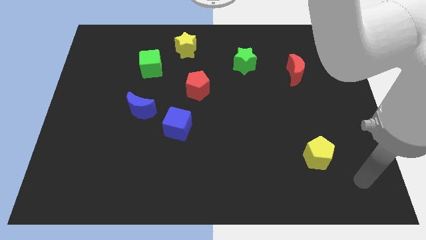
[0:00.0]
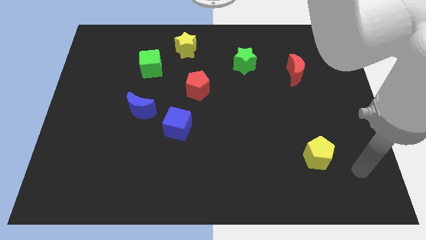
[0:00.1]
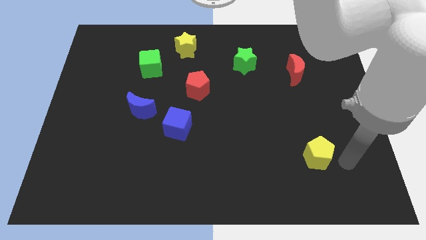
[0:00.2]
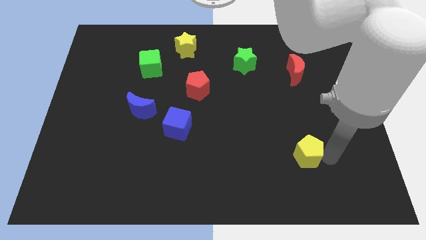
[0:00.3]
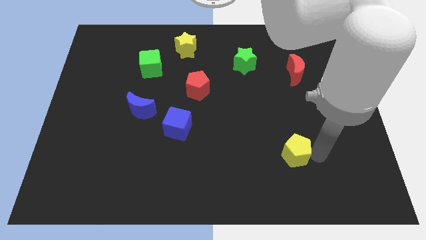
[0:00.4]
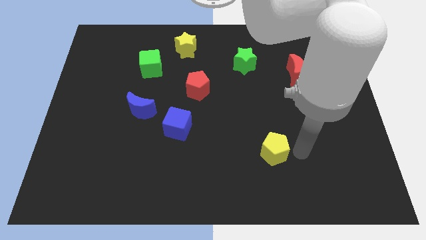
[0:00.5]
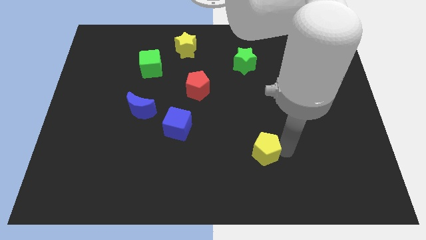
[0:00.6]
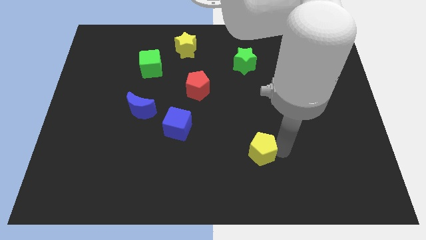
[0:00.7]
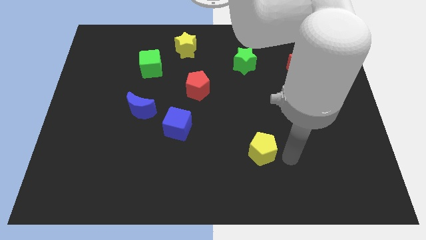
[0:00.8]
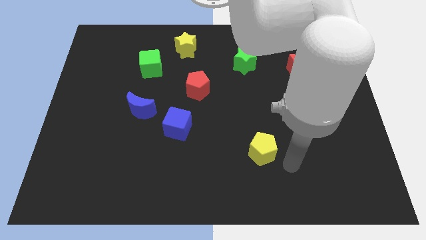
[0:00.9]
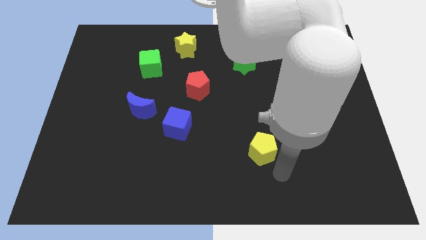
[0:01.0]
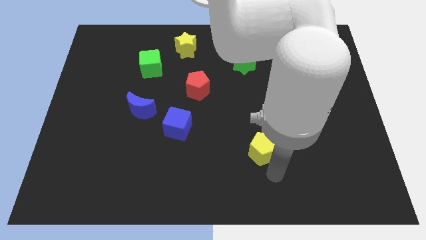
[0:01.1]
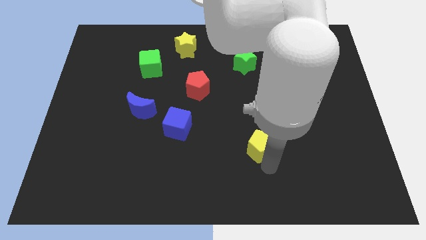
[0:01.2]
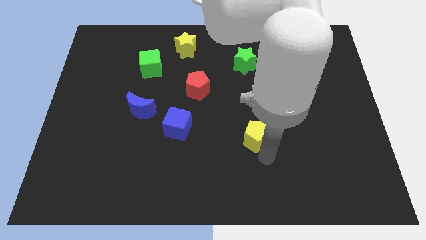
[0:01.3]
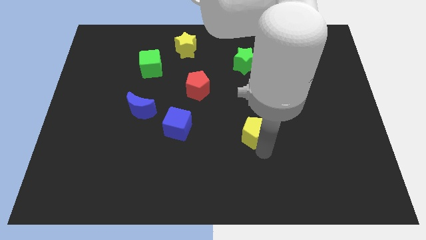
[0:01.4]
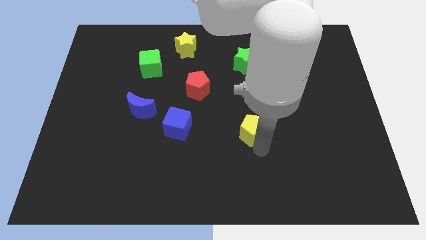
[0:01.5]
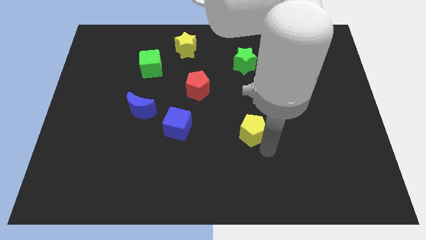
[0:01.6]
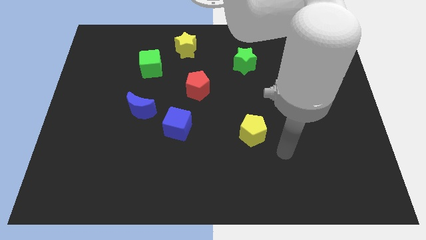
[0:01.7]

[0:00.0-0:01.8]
push yellow pentagon towards the blue block

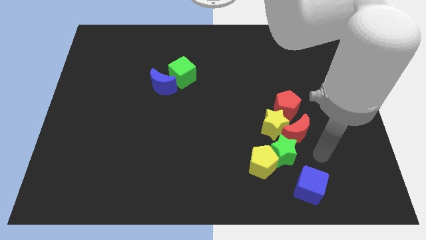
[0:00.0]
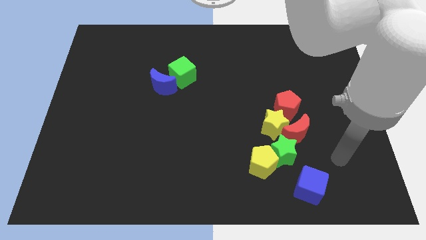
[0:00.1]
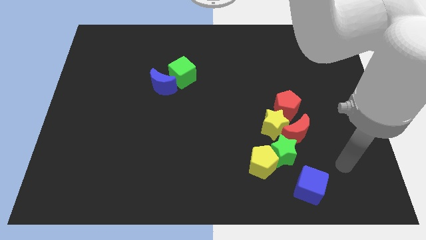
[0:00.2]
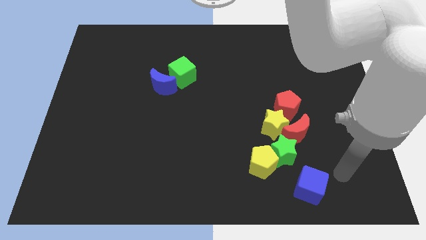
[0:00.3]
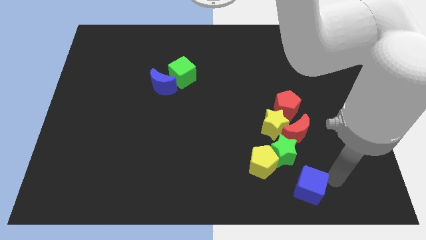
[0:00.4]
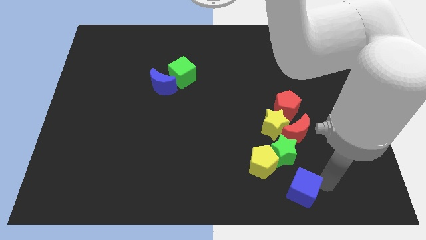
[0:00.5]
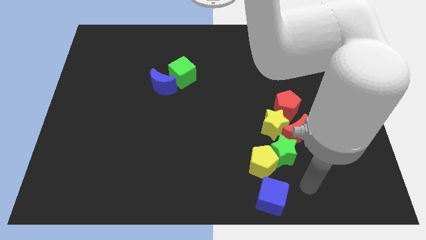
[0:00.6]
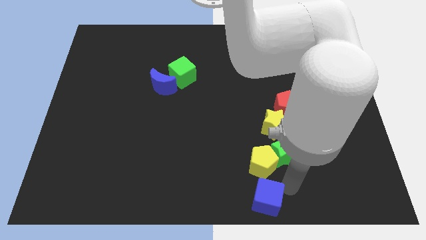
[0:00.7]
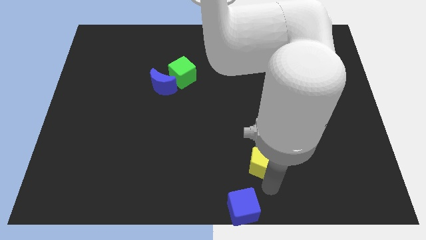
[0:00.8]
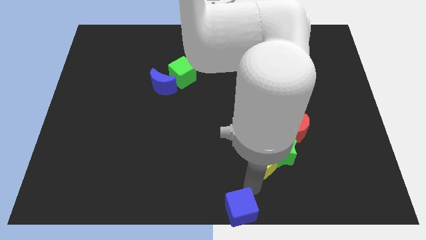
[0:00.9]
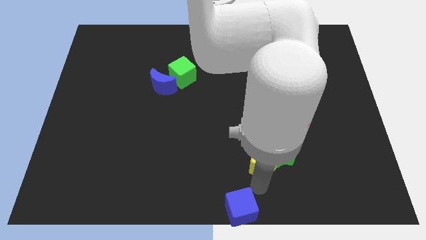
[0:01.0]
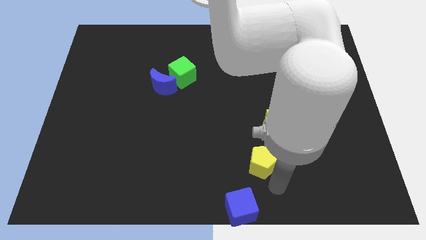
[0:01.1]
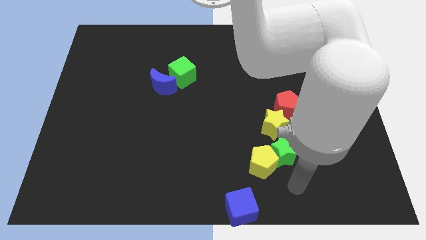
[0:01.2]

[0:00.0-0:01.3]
move blue cube to the bottom center of the board

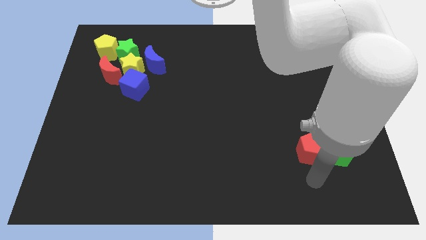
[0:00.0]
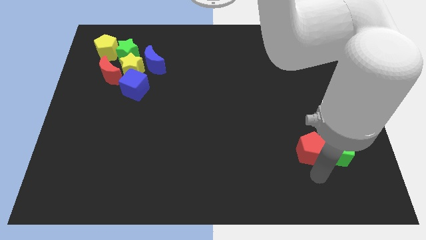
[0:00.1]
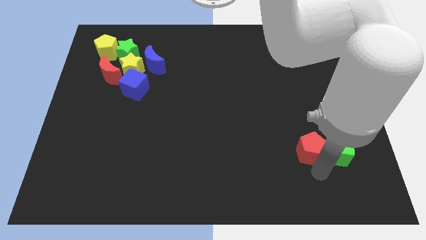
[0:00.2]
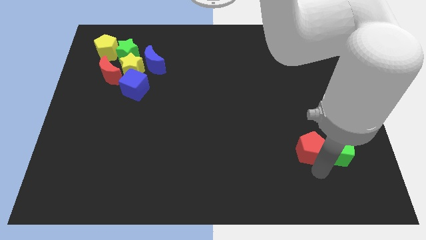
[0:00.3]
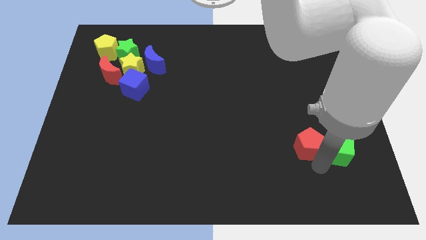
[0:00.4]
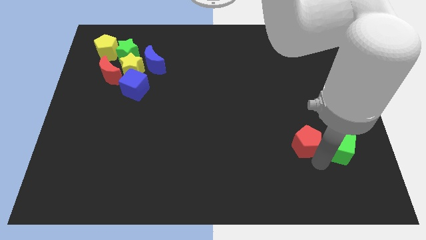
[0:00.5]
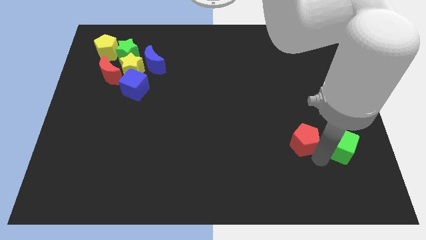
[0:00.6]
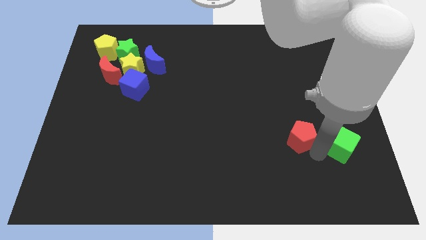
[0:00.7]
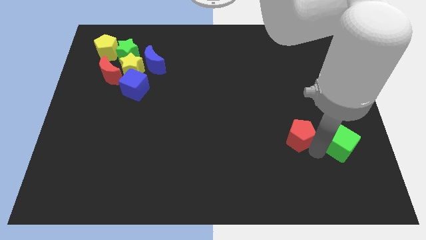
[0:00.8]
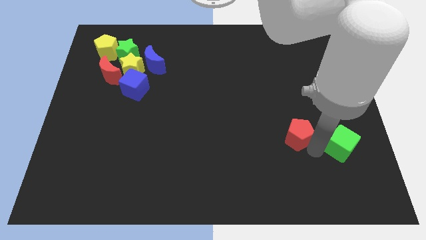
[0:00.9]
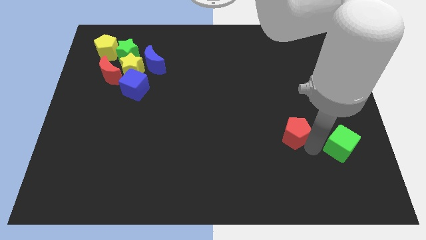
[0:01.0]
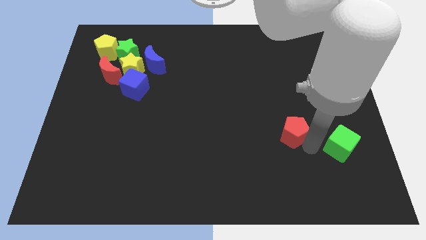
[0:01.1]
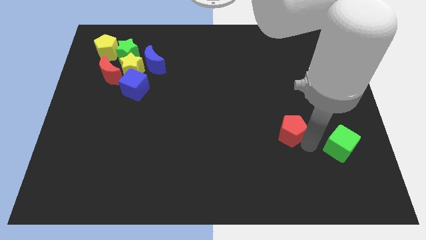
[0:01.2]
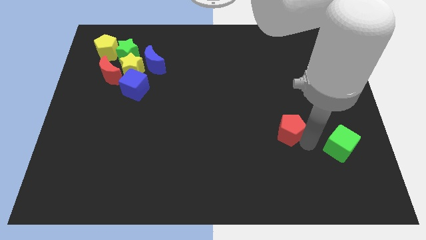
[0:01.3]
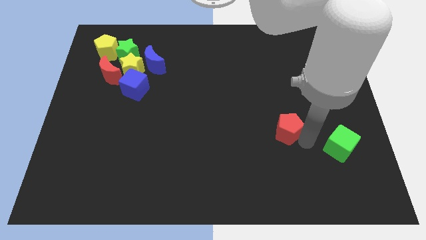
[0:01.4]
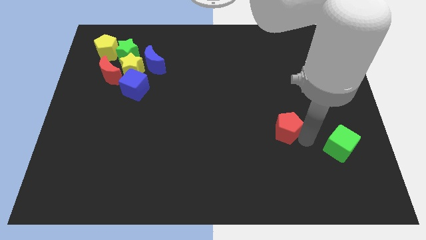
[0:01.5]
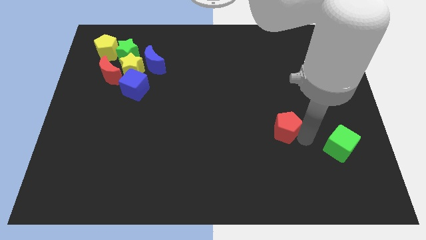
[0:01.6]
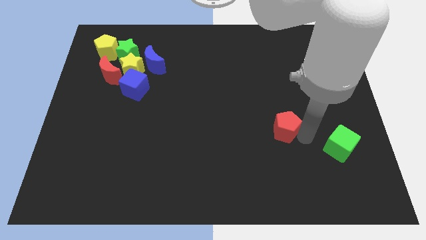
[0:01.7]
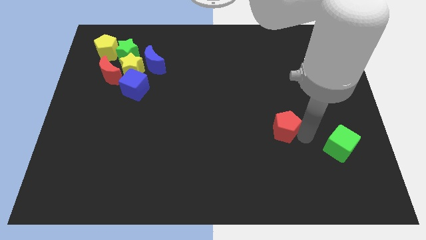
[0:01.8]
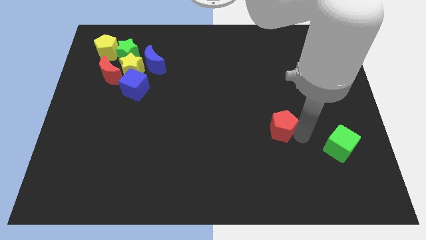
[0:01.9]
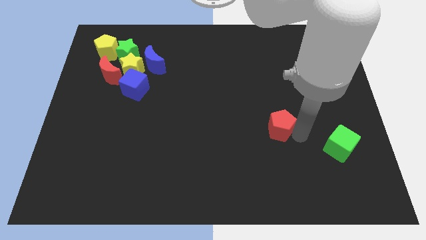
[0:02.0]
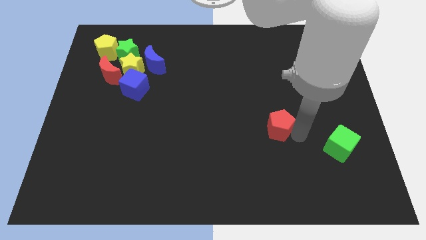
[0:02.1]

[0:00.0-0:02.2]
separate the red pentagon and green cube

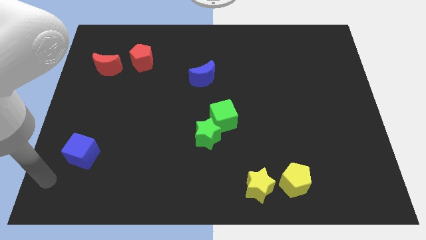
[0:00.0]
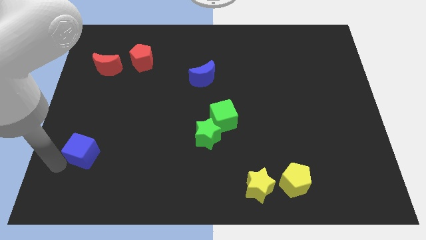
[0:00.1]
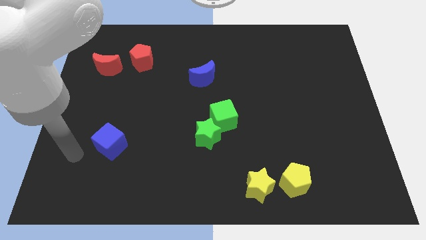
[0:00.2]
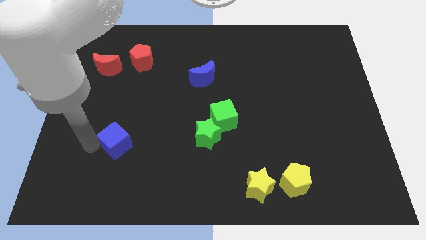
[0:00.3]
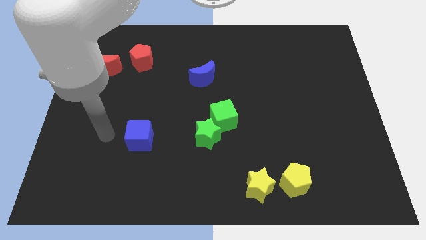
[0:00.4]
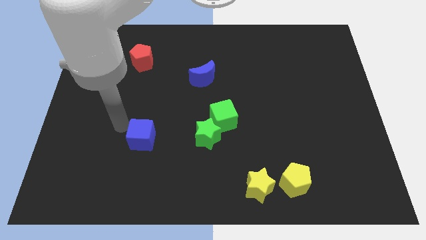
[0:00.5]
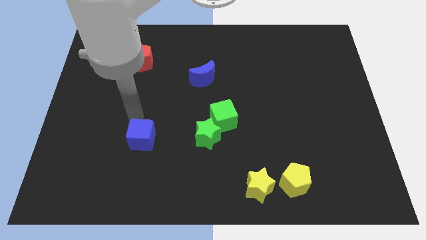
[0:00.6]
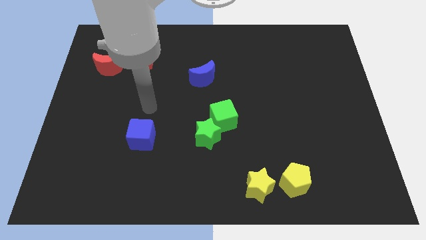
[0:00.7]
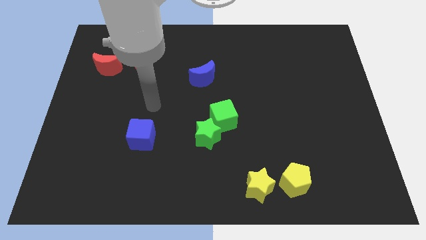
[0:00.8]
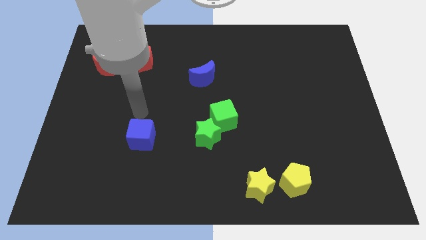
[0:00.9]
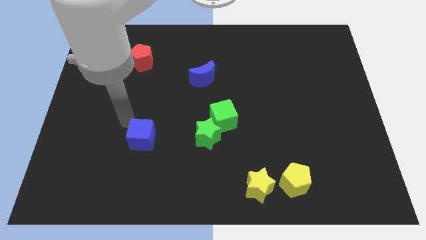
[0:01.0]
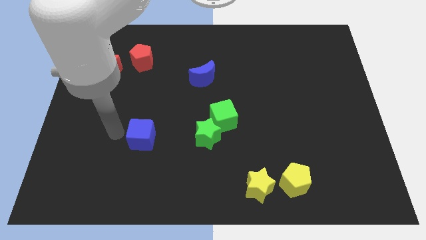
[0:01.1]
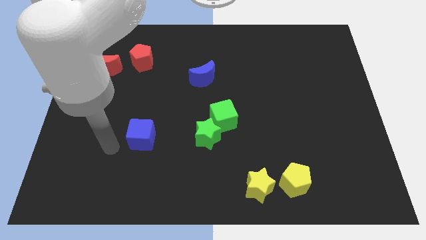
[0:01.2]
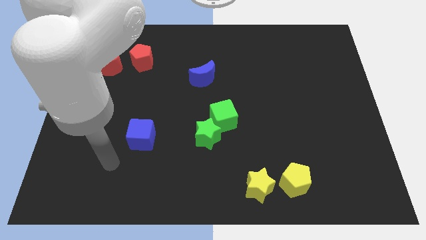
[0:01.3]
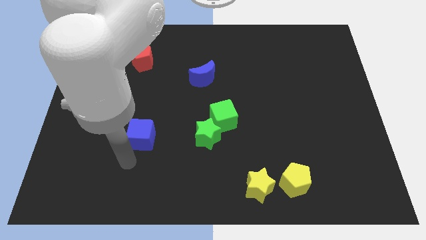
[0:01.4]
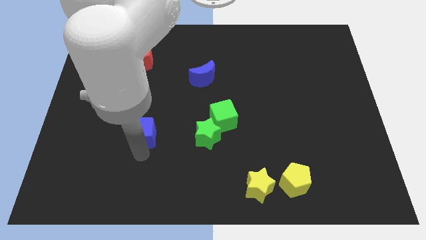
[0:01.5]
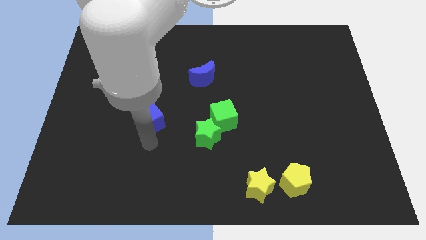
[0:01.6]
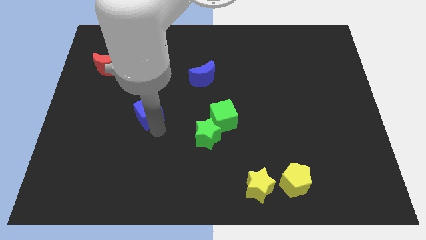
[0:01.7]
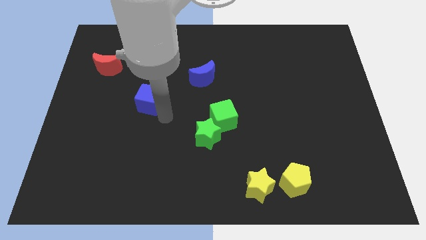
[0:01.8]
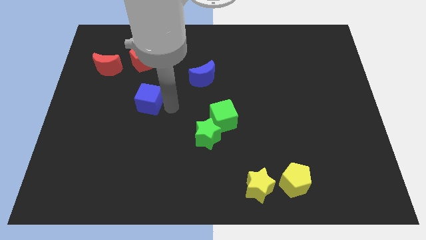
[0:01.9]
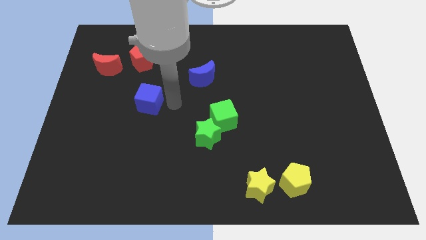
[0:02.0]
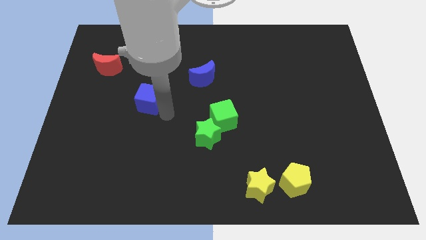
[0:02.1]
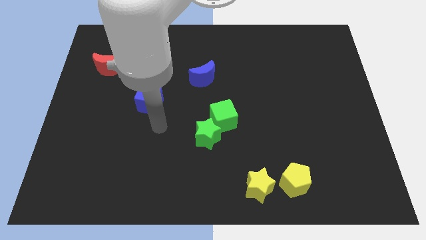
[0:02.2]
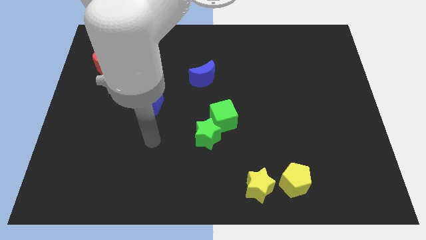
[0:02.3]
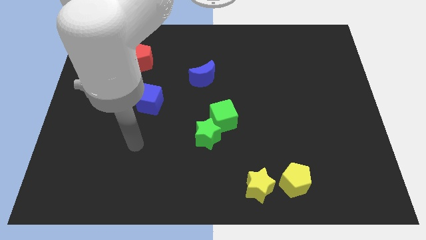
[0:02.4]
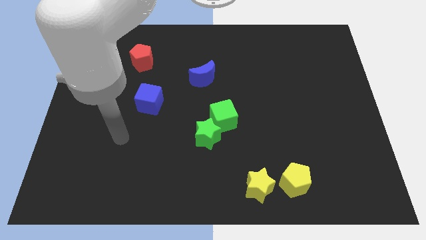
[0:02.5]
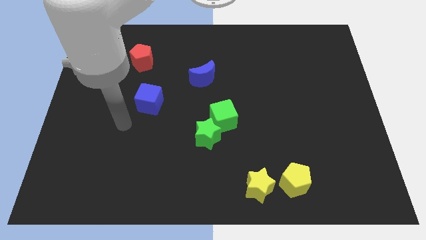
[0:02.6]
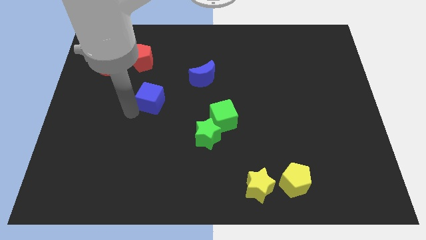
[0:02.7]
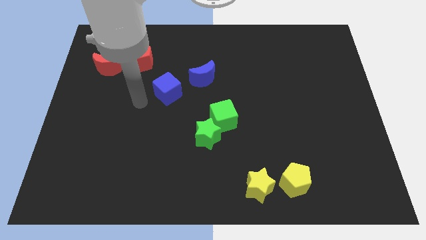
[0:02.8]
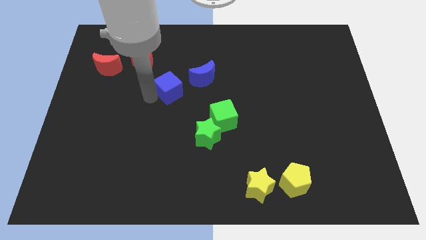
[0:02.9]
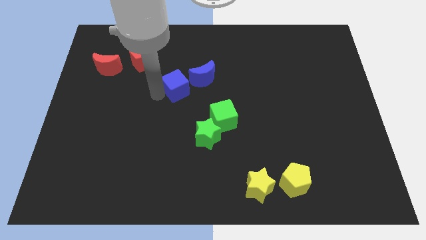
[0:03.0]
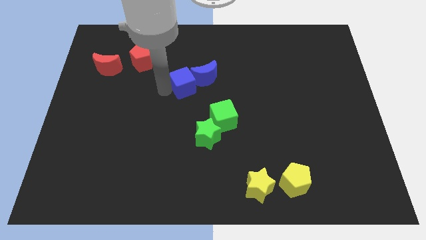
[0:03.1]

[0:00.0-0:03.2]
push the blue cube bottom left to the blue crescent

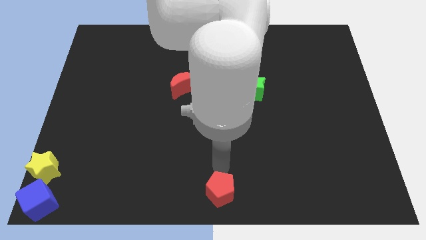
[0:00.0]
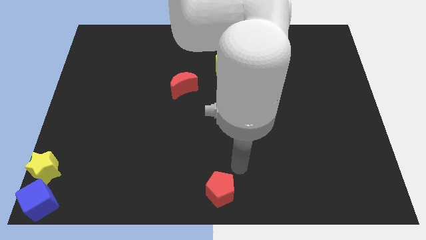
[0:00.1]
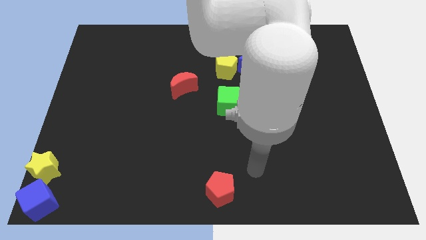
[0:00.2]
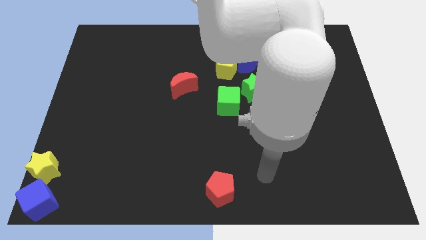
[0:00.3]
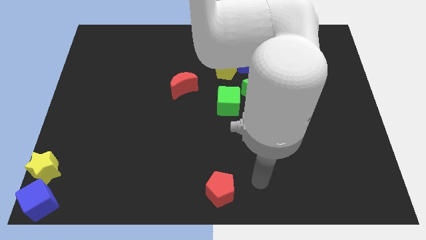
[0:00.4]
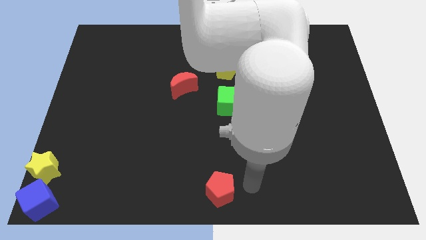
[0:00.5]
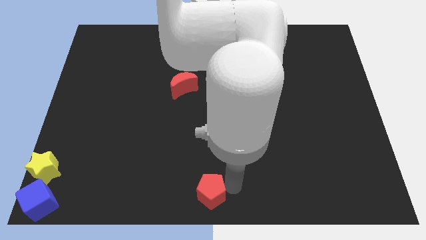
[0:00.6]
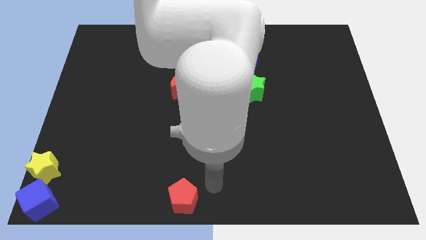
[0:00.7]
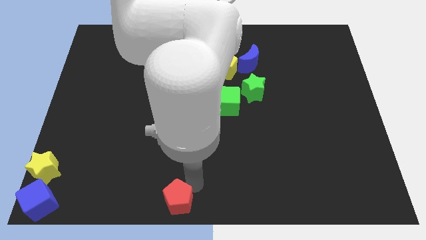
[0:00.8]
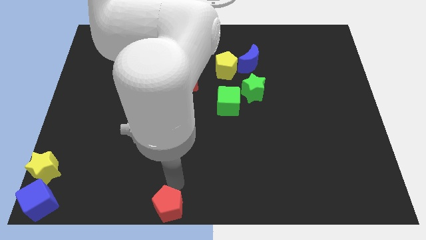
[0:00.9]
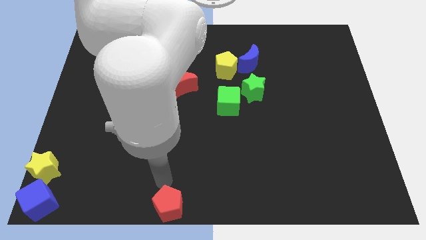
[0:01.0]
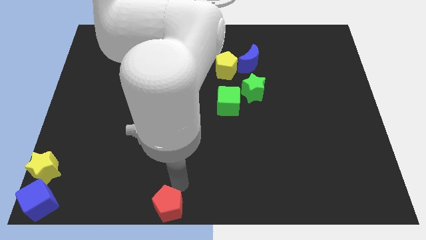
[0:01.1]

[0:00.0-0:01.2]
place red pentagon parallel right to blue cube
